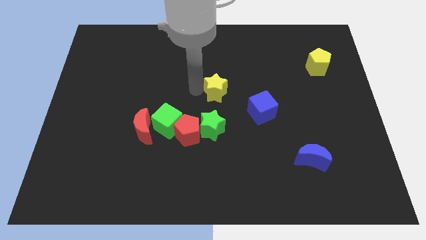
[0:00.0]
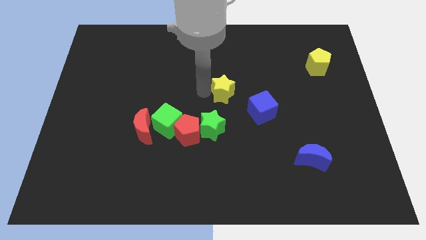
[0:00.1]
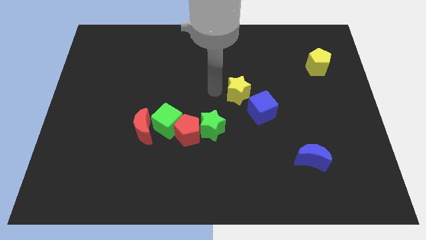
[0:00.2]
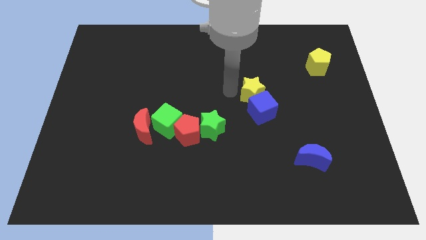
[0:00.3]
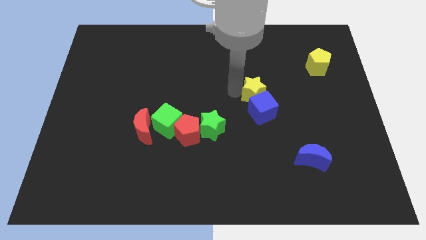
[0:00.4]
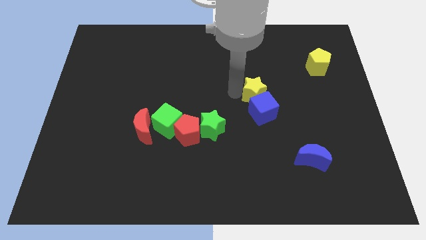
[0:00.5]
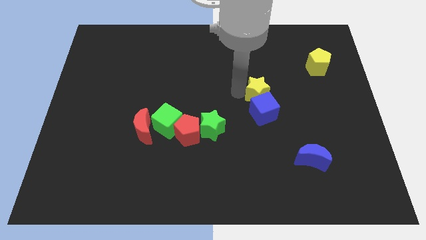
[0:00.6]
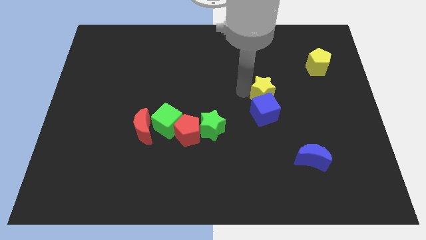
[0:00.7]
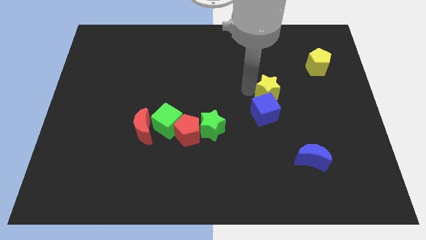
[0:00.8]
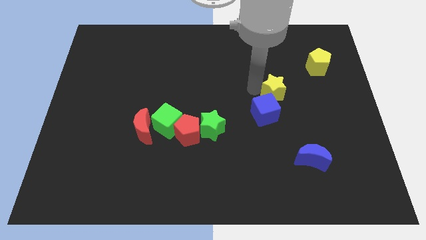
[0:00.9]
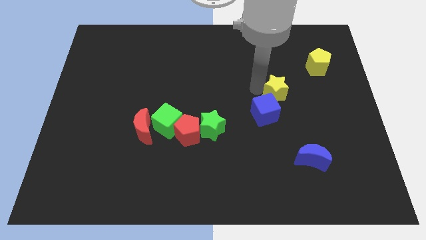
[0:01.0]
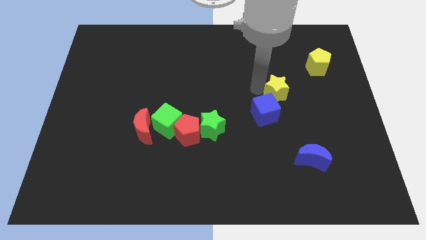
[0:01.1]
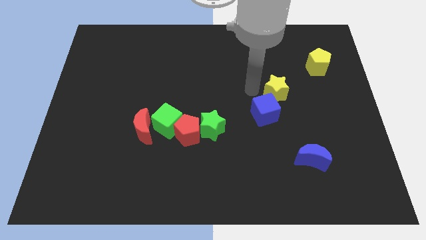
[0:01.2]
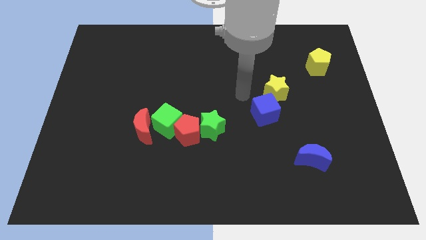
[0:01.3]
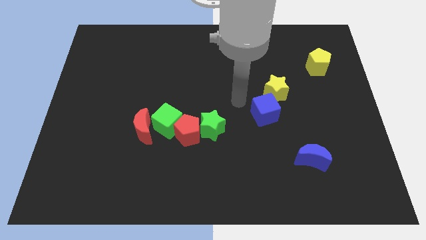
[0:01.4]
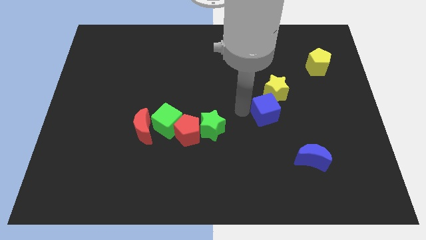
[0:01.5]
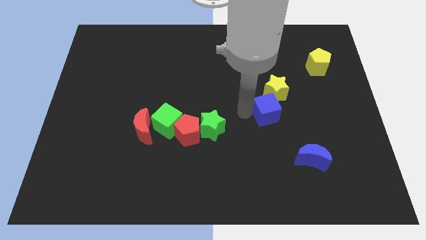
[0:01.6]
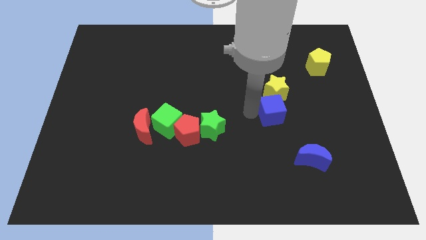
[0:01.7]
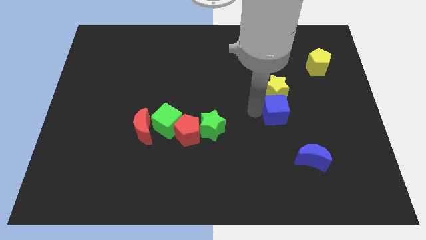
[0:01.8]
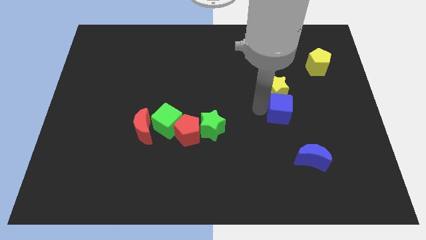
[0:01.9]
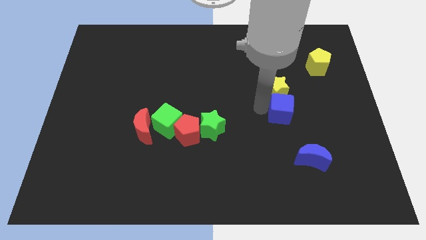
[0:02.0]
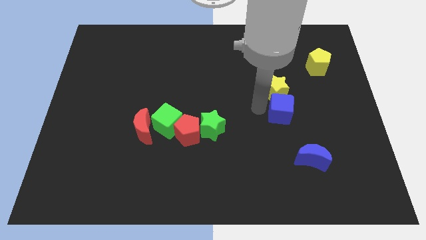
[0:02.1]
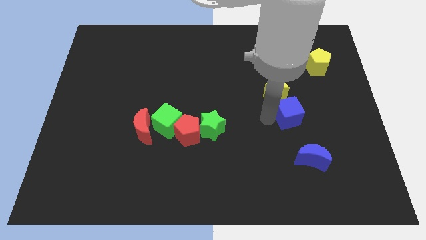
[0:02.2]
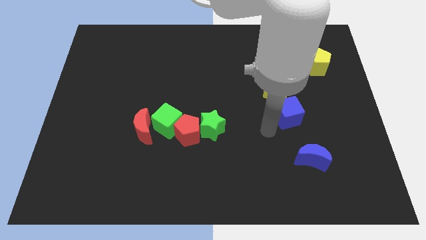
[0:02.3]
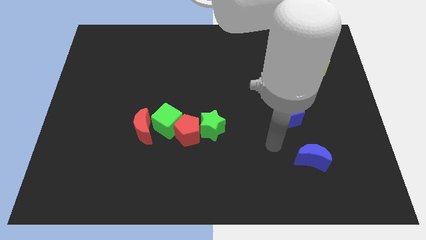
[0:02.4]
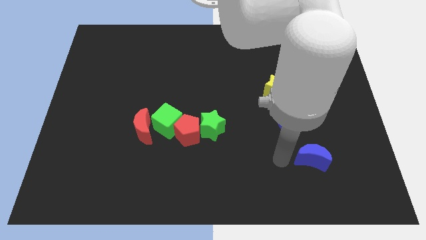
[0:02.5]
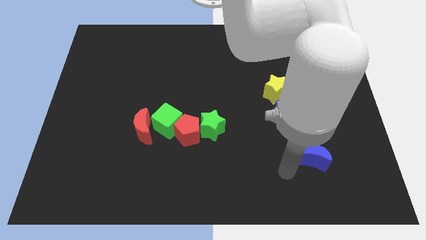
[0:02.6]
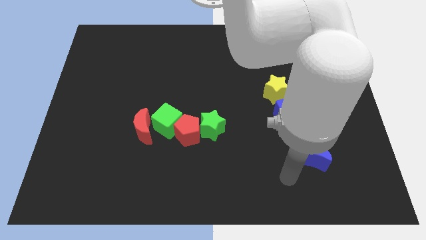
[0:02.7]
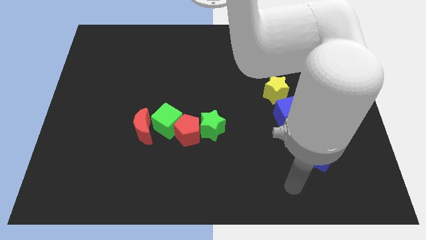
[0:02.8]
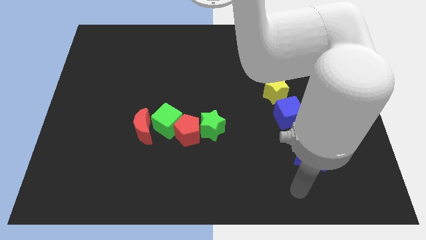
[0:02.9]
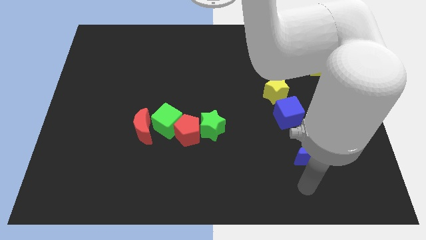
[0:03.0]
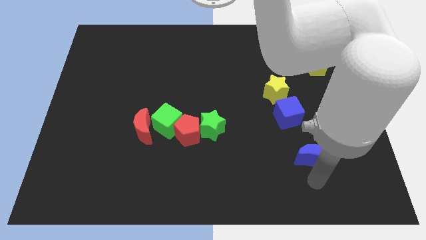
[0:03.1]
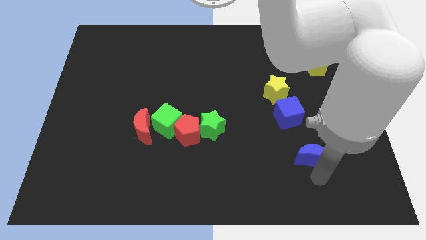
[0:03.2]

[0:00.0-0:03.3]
move the yellow star at the top side of the blue cube

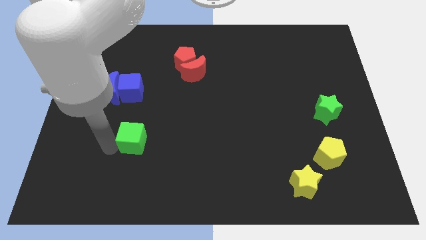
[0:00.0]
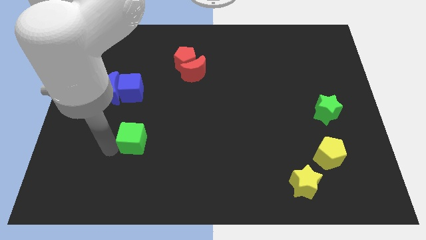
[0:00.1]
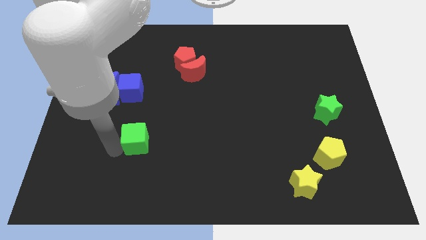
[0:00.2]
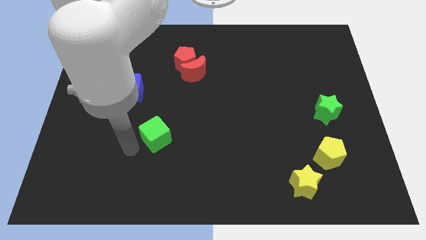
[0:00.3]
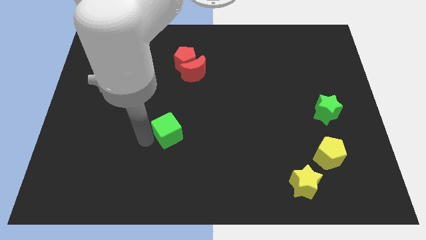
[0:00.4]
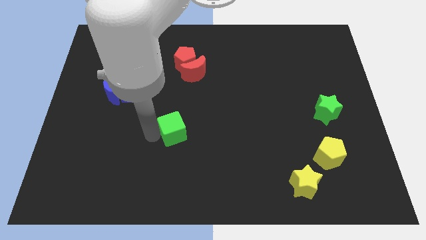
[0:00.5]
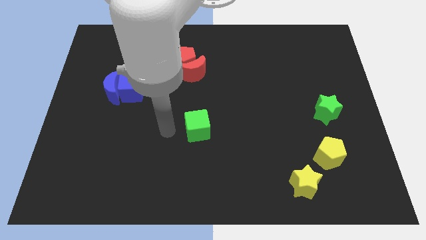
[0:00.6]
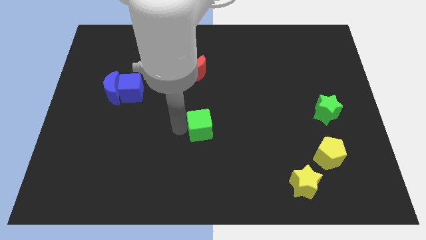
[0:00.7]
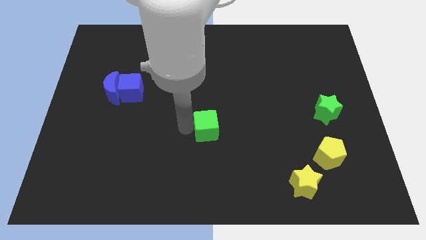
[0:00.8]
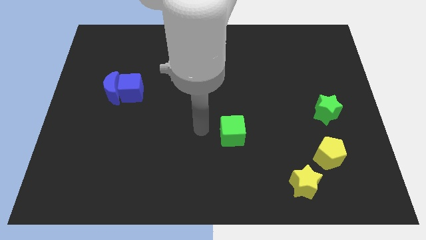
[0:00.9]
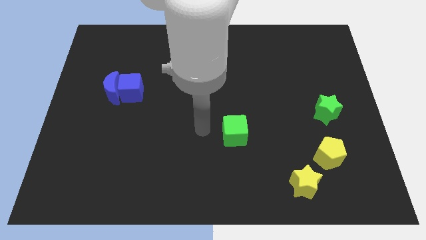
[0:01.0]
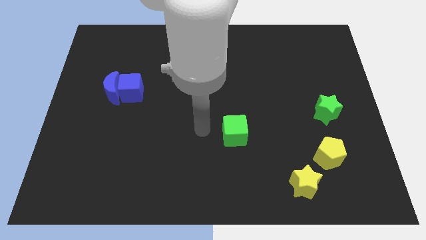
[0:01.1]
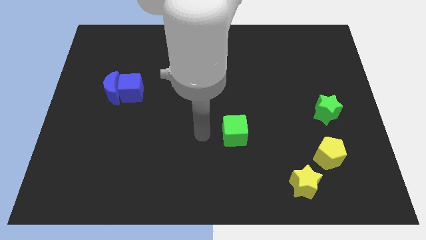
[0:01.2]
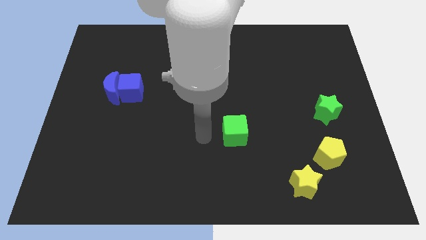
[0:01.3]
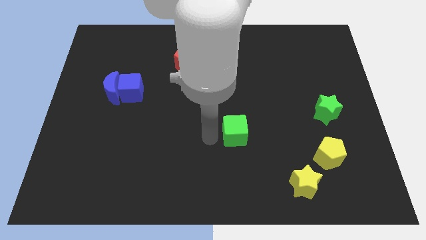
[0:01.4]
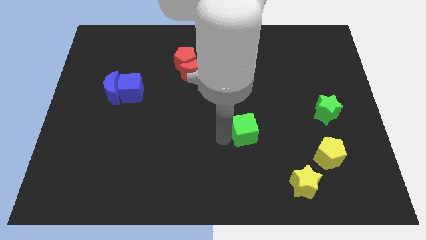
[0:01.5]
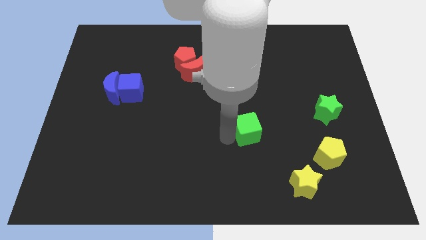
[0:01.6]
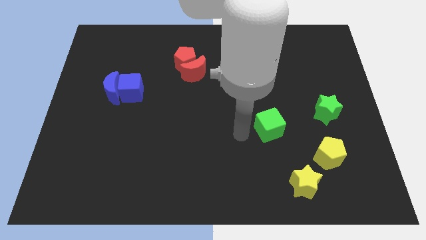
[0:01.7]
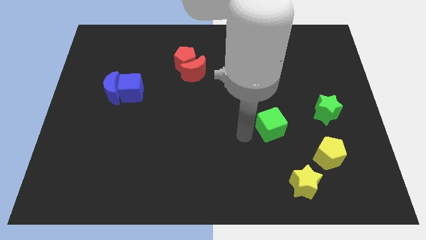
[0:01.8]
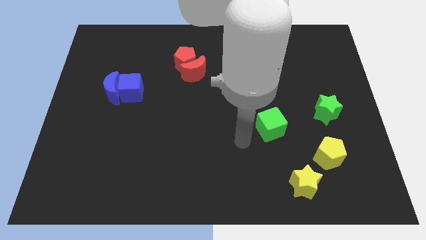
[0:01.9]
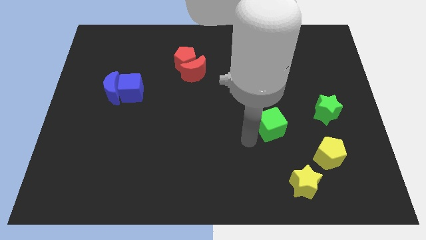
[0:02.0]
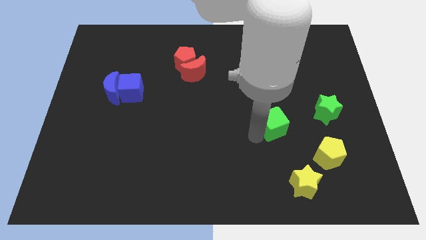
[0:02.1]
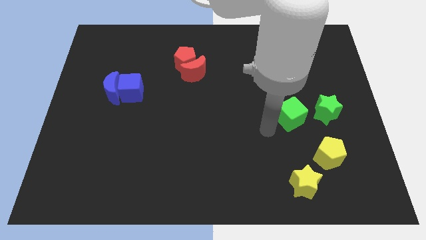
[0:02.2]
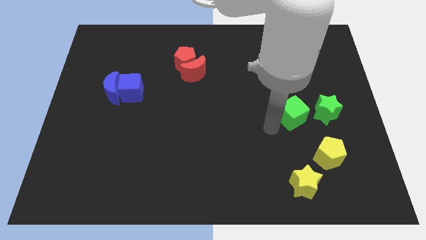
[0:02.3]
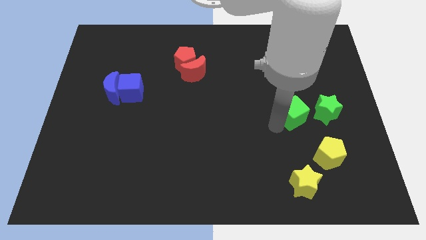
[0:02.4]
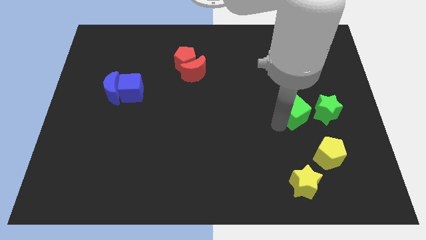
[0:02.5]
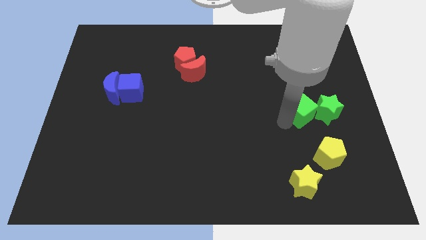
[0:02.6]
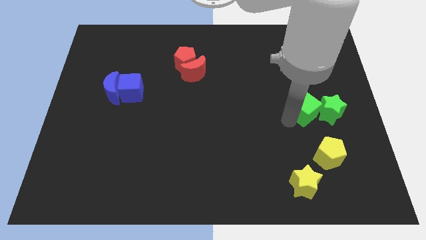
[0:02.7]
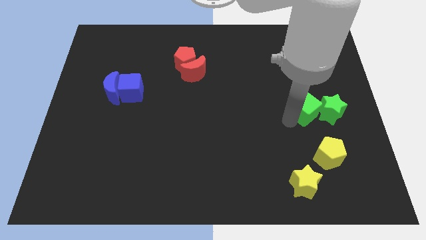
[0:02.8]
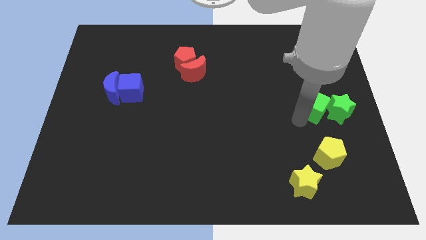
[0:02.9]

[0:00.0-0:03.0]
push green cube in to green star

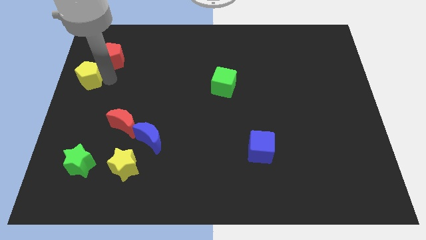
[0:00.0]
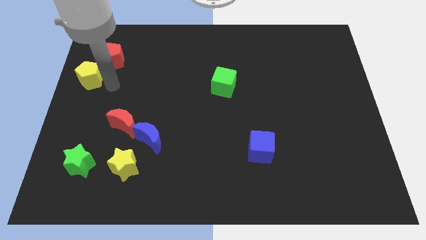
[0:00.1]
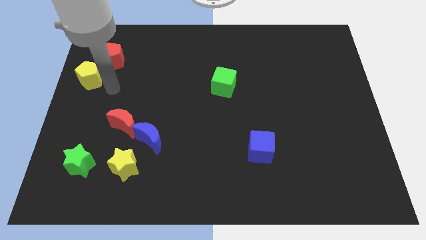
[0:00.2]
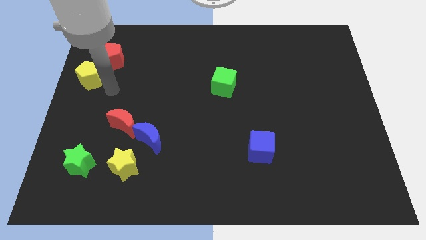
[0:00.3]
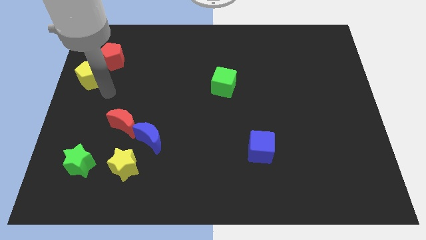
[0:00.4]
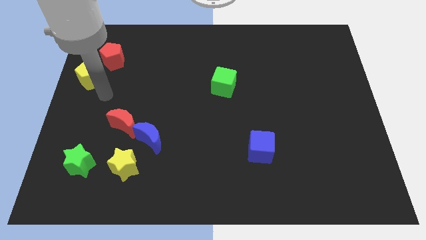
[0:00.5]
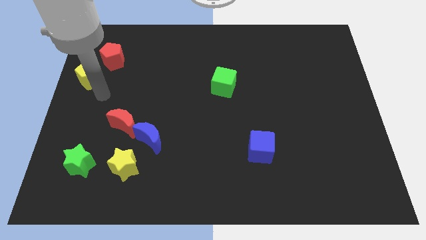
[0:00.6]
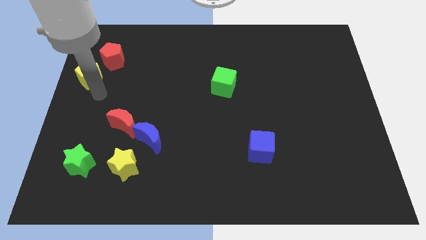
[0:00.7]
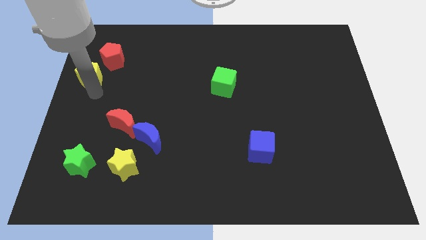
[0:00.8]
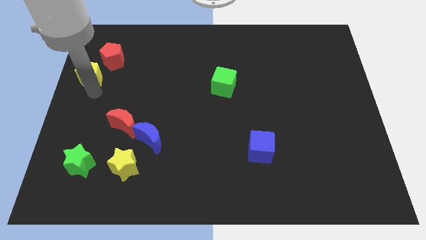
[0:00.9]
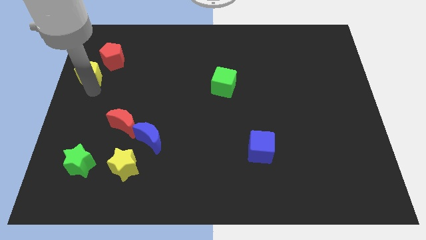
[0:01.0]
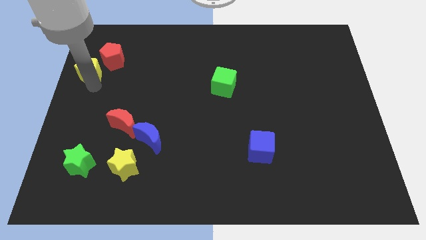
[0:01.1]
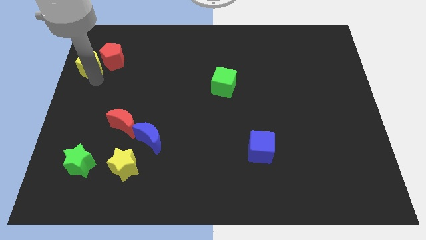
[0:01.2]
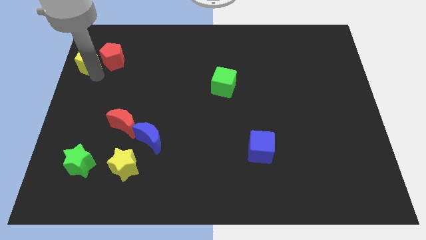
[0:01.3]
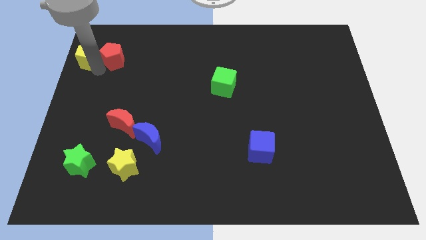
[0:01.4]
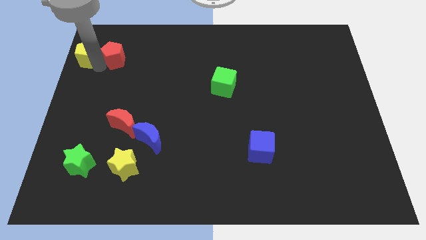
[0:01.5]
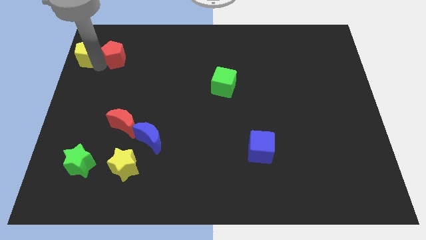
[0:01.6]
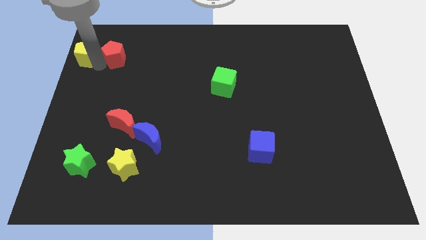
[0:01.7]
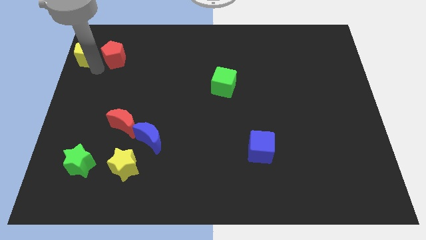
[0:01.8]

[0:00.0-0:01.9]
put the yellow pentagon left to the red pentagon

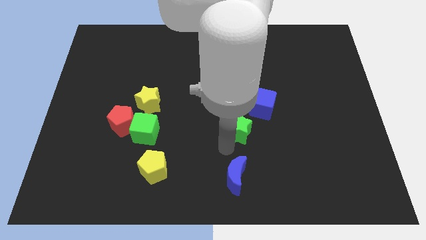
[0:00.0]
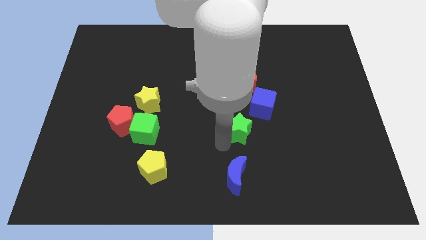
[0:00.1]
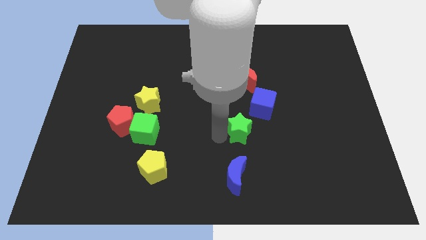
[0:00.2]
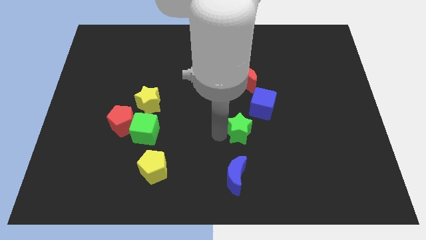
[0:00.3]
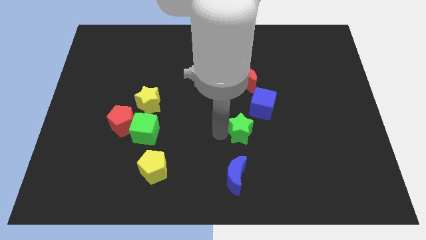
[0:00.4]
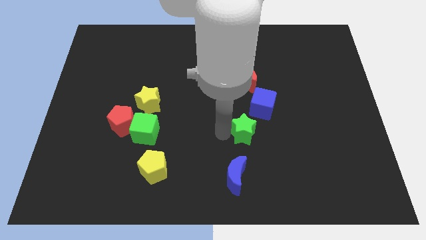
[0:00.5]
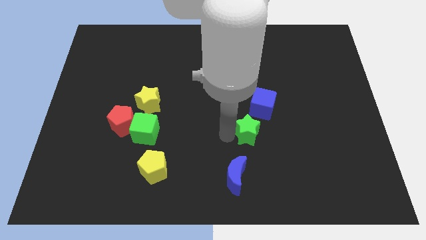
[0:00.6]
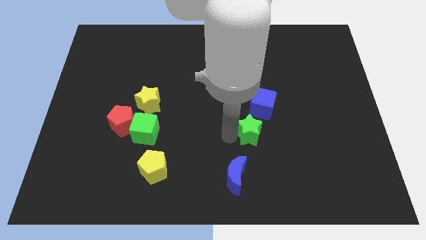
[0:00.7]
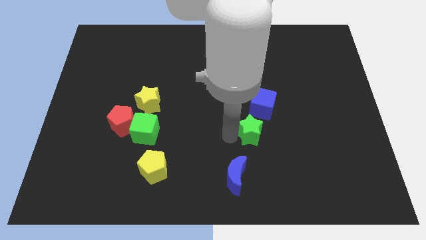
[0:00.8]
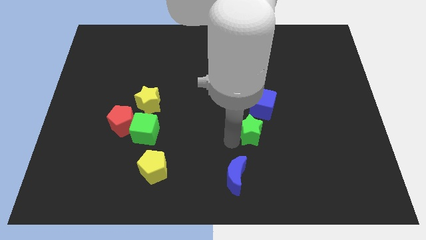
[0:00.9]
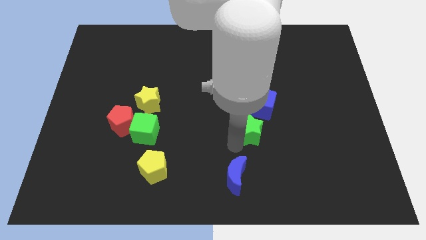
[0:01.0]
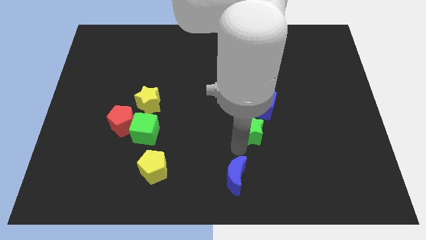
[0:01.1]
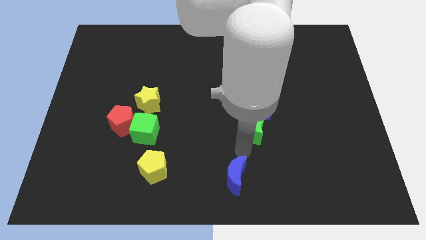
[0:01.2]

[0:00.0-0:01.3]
slide green star to the bottom of blue cube
